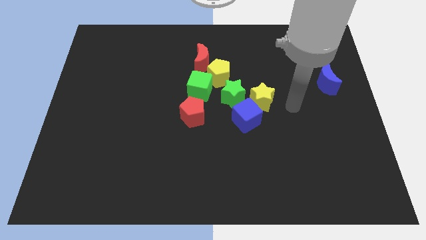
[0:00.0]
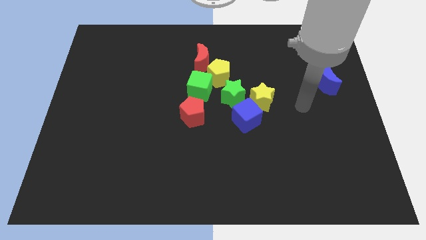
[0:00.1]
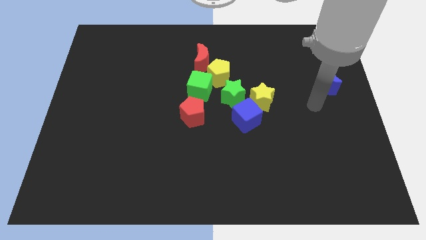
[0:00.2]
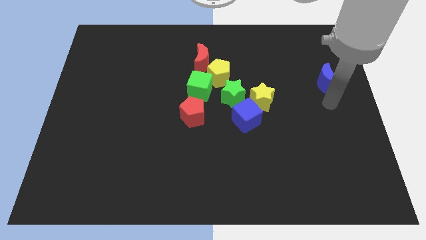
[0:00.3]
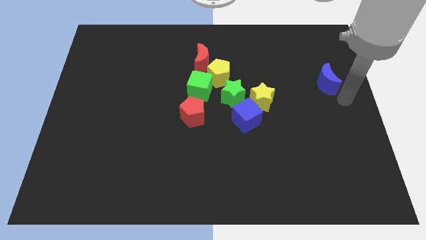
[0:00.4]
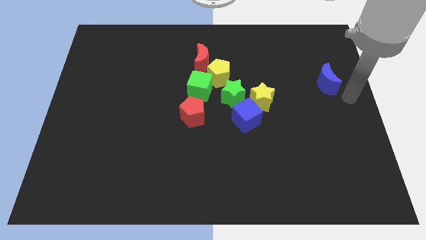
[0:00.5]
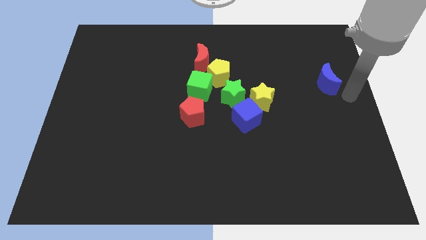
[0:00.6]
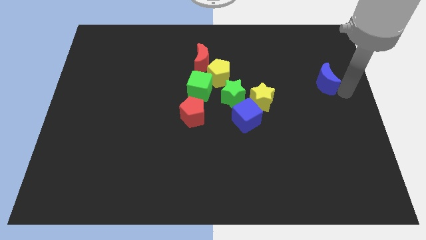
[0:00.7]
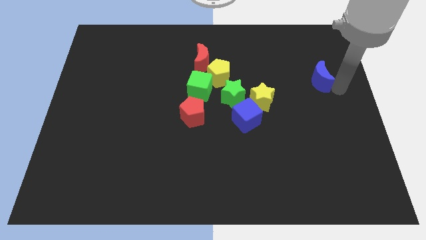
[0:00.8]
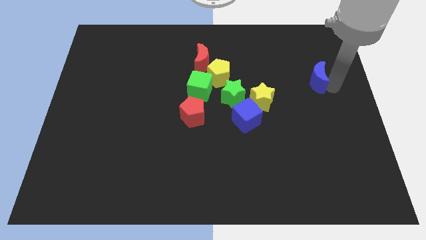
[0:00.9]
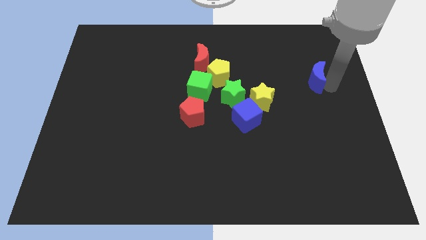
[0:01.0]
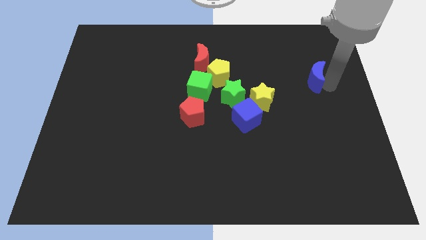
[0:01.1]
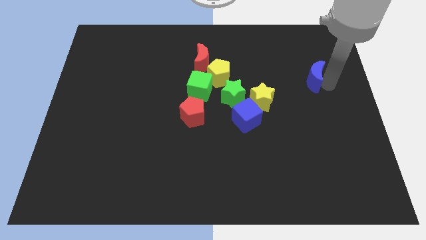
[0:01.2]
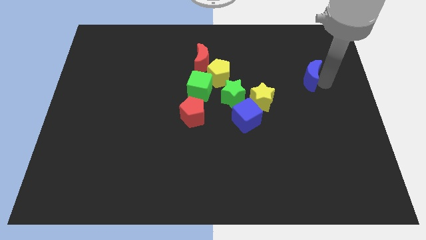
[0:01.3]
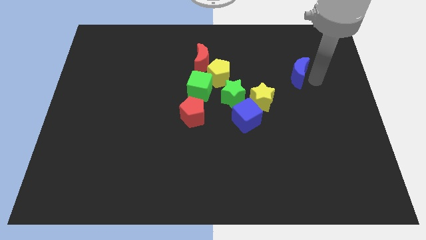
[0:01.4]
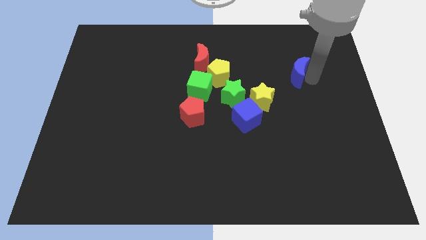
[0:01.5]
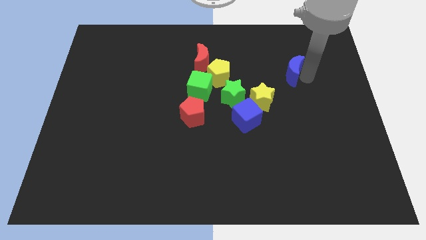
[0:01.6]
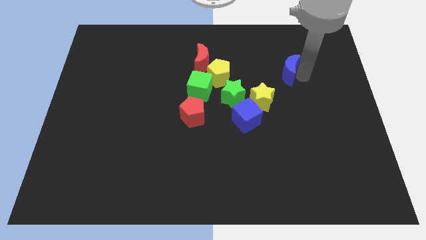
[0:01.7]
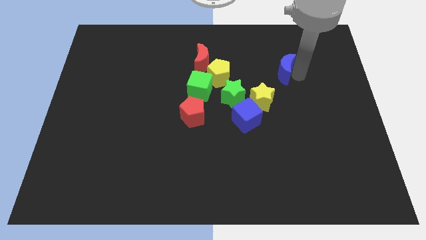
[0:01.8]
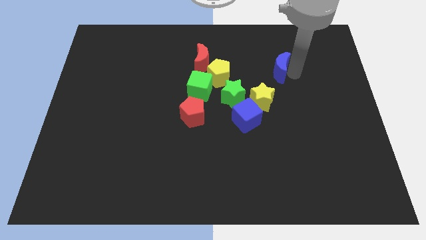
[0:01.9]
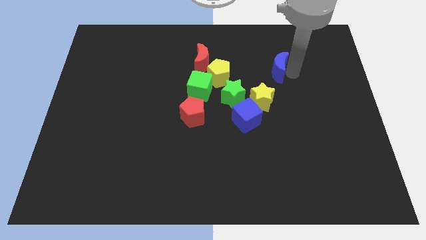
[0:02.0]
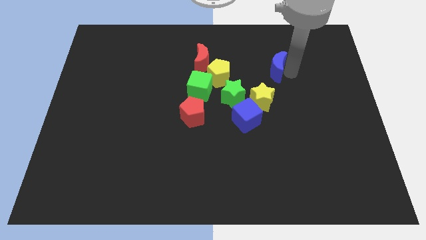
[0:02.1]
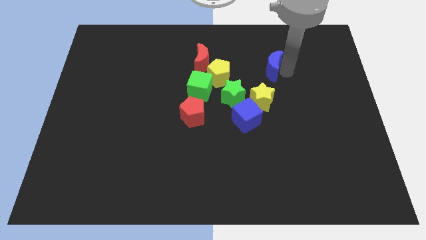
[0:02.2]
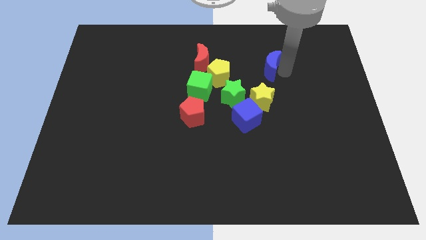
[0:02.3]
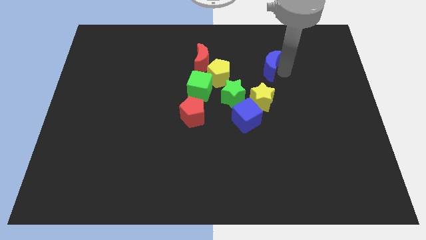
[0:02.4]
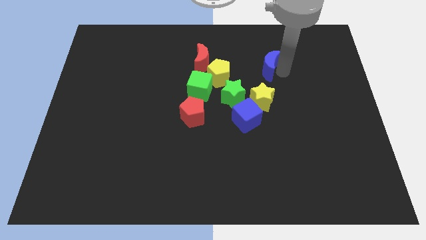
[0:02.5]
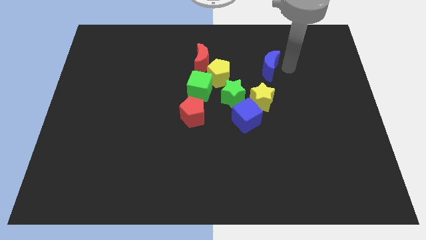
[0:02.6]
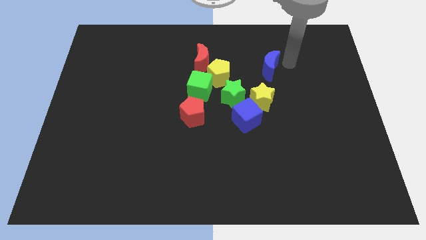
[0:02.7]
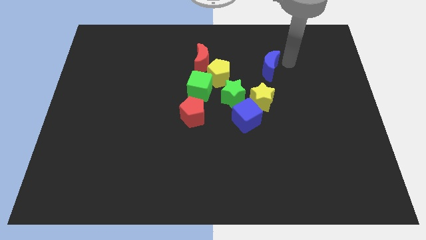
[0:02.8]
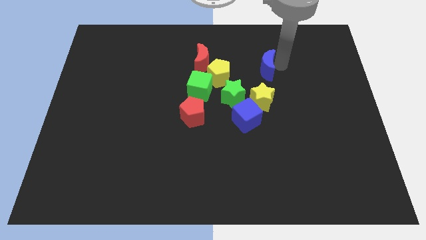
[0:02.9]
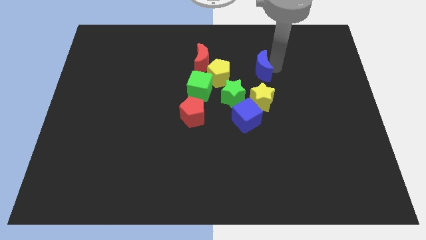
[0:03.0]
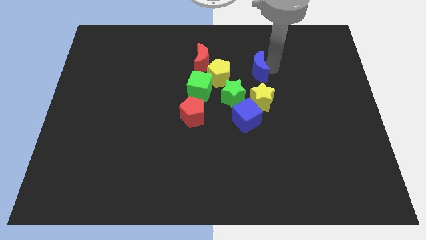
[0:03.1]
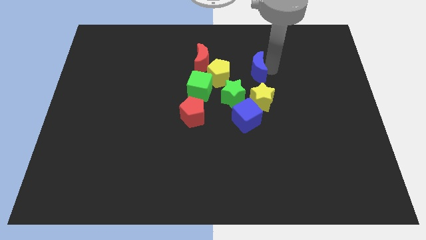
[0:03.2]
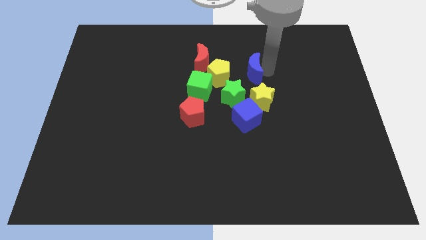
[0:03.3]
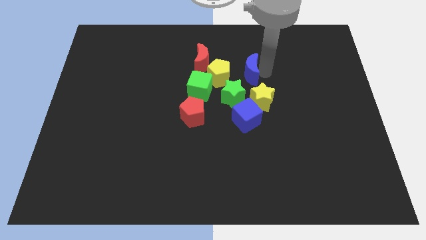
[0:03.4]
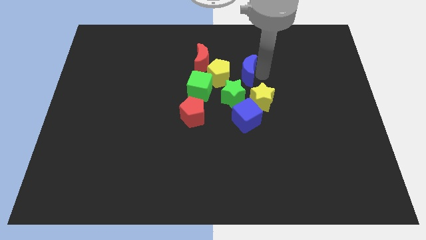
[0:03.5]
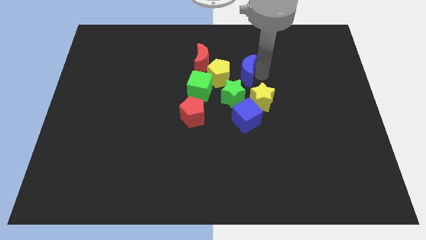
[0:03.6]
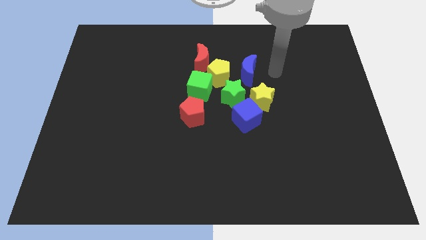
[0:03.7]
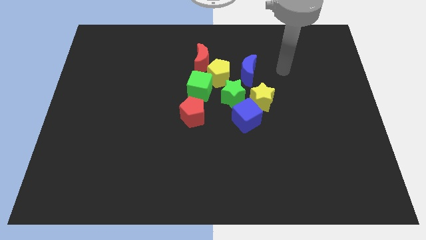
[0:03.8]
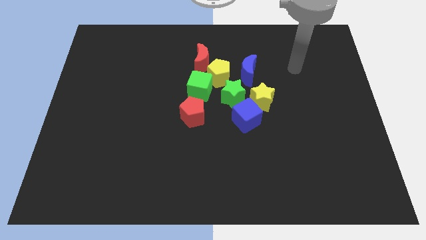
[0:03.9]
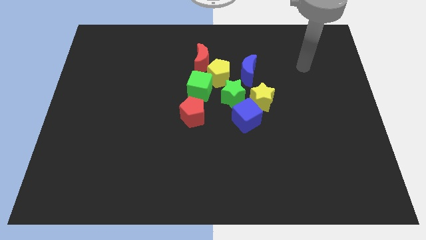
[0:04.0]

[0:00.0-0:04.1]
move the blue crescent towards the yellow pentagon
